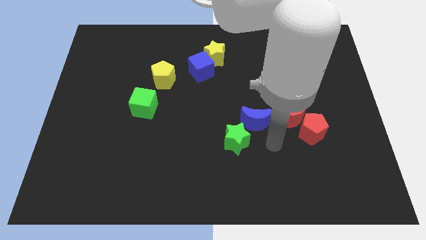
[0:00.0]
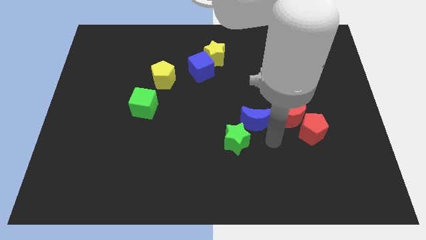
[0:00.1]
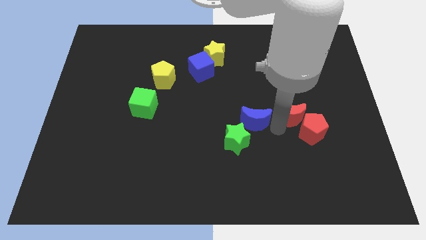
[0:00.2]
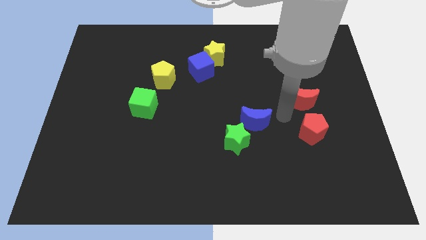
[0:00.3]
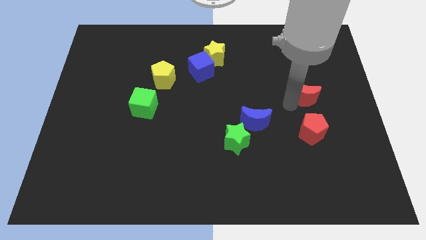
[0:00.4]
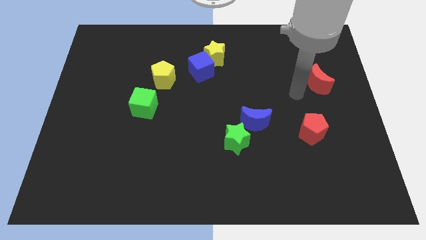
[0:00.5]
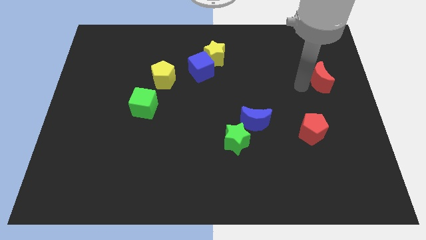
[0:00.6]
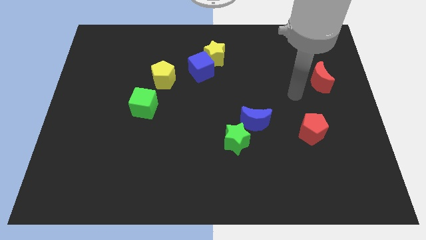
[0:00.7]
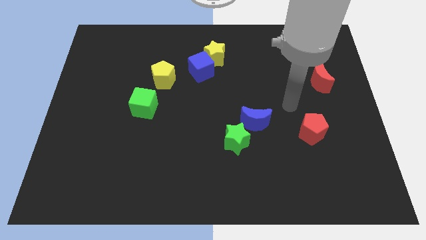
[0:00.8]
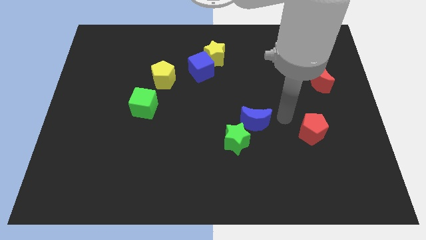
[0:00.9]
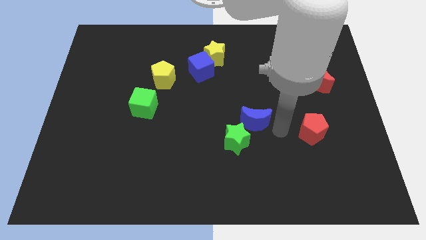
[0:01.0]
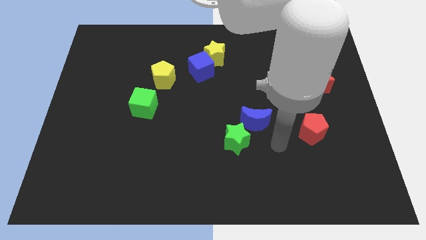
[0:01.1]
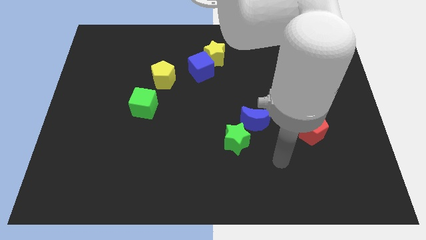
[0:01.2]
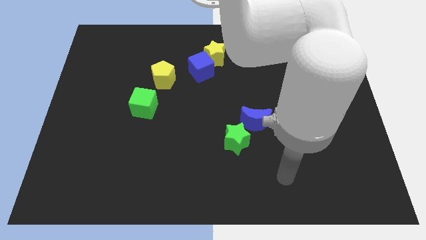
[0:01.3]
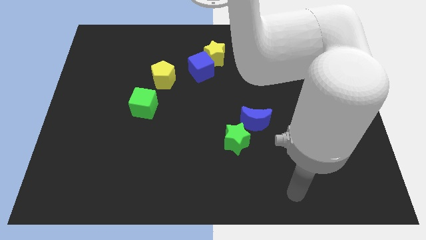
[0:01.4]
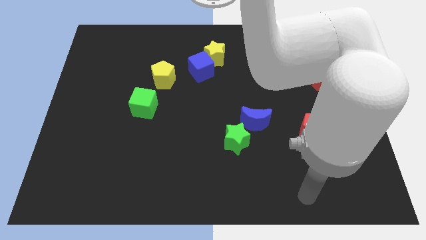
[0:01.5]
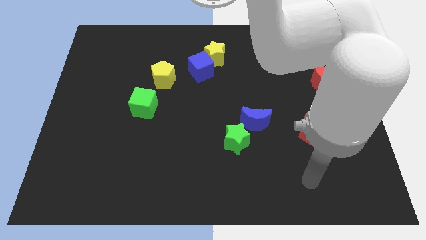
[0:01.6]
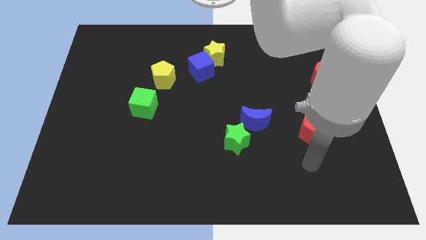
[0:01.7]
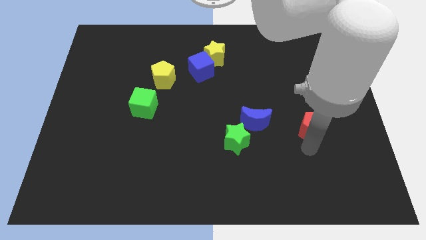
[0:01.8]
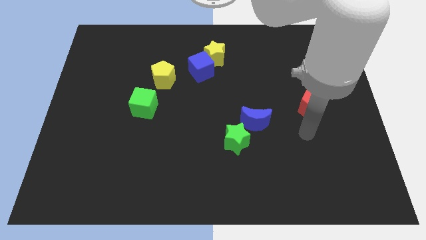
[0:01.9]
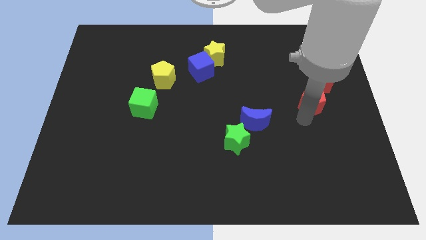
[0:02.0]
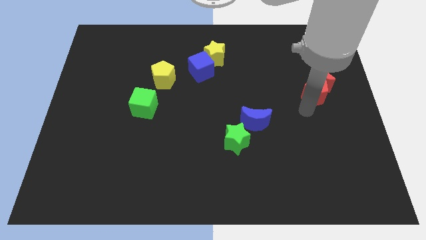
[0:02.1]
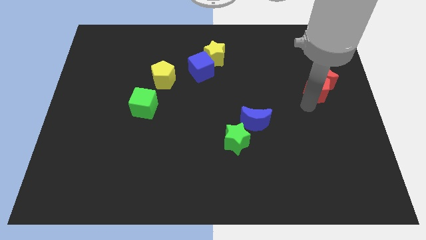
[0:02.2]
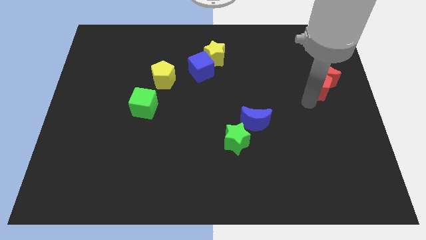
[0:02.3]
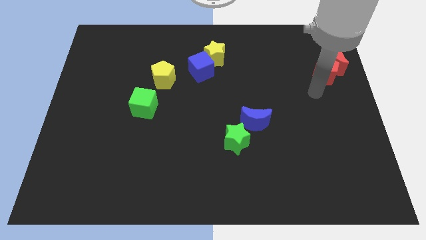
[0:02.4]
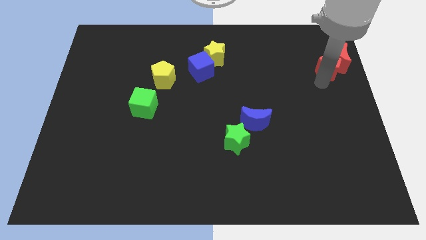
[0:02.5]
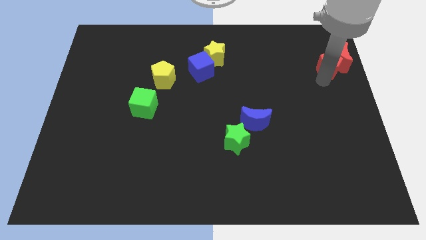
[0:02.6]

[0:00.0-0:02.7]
move the red blocks top right of the board

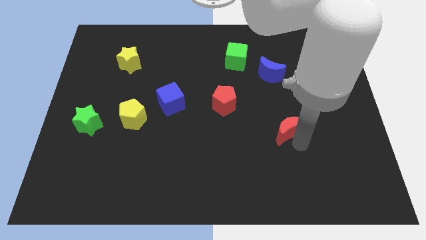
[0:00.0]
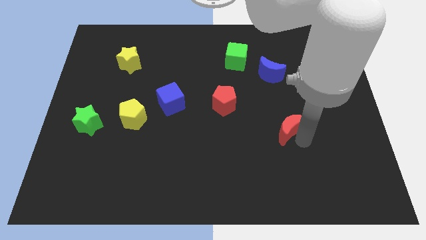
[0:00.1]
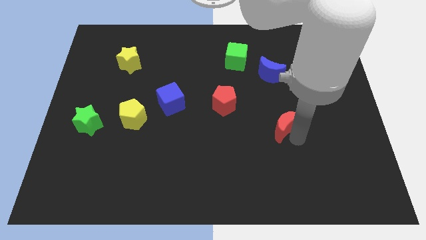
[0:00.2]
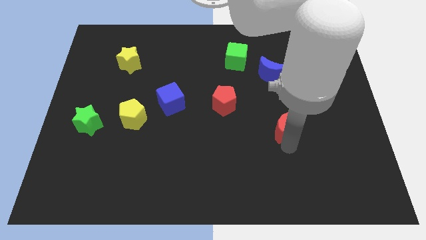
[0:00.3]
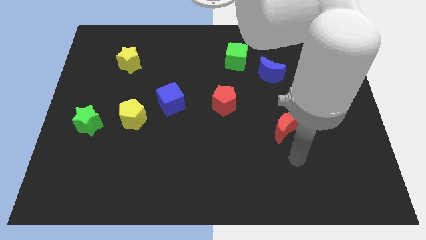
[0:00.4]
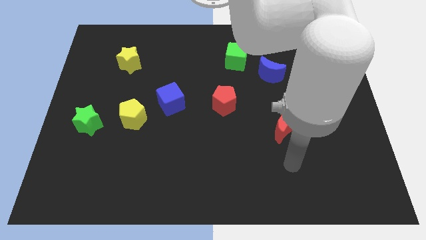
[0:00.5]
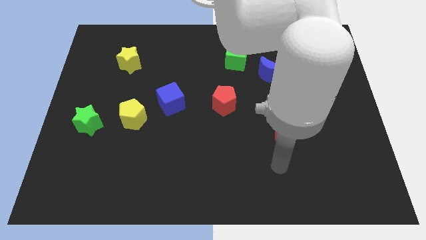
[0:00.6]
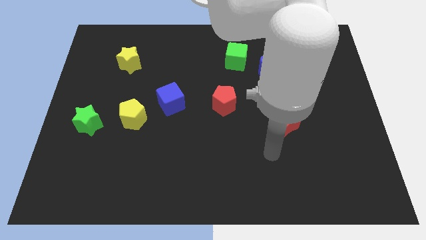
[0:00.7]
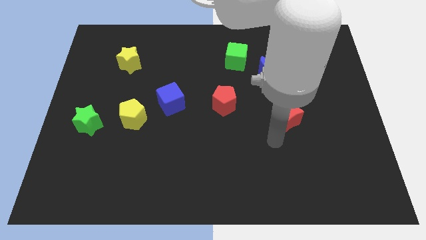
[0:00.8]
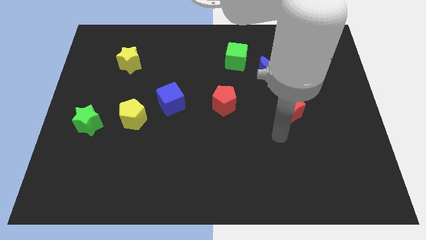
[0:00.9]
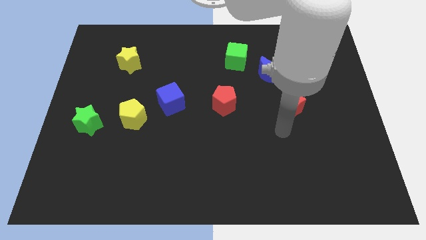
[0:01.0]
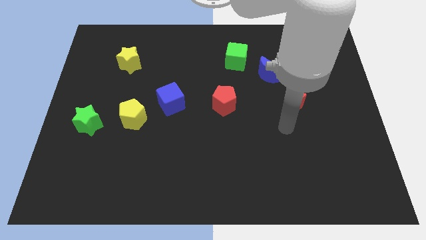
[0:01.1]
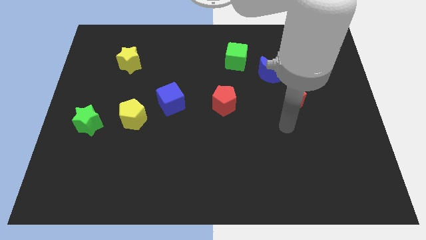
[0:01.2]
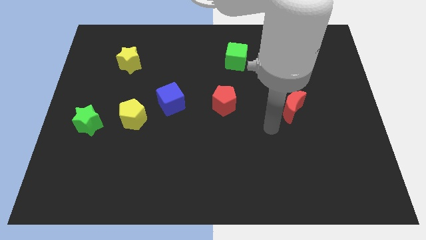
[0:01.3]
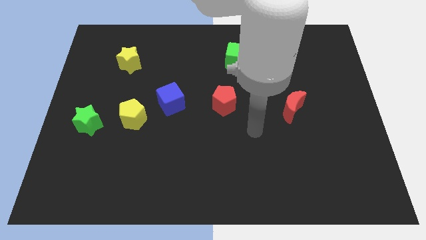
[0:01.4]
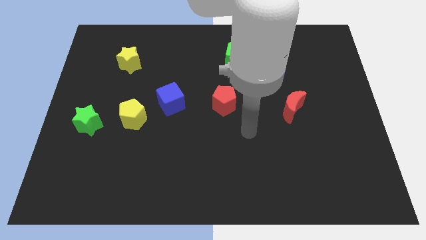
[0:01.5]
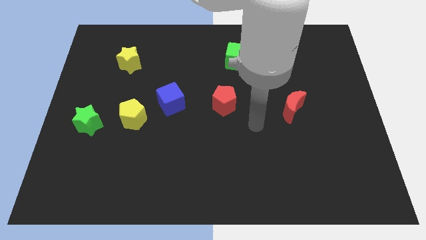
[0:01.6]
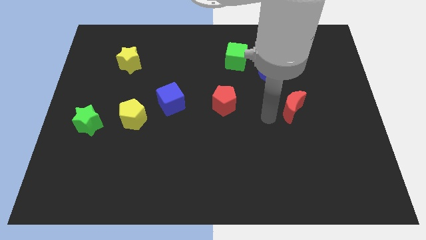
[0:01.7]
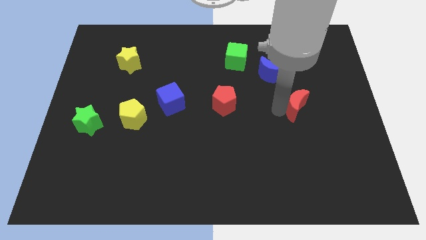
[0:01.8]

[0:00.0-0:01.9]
move the red moon to right side of the board

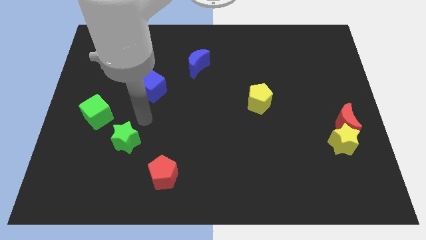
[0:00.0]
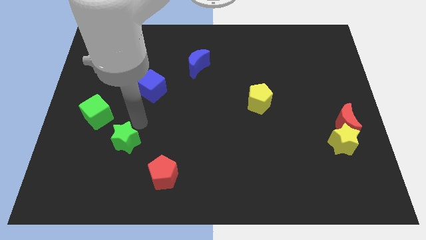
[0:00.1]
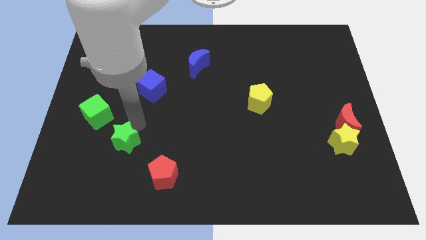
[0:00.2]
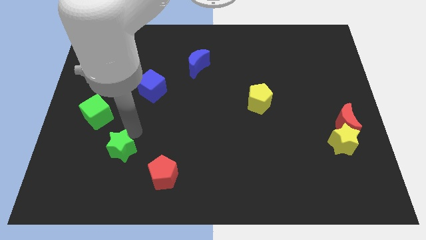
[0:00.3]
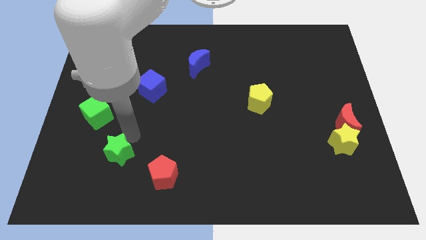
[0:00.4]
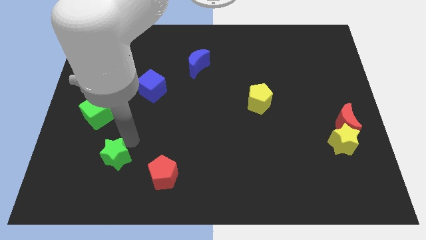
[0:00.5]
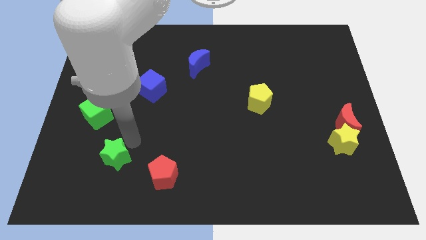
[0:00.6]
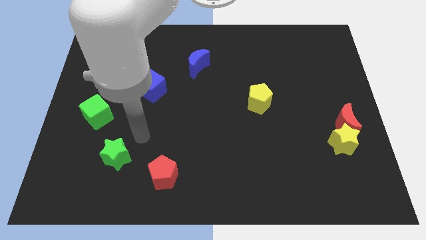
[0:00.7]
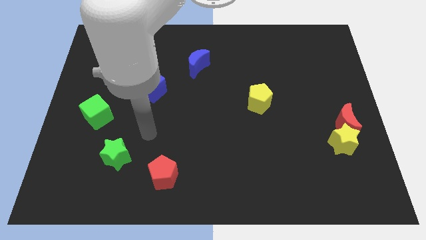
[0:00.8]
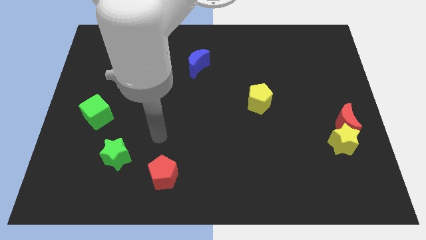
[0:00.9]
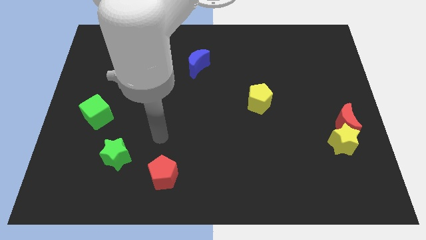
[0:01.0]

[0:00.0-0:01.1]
slightly push the green star to the bottom of the board

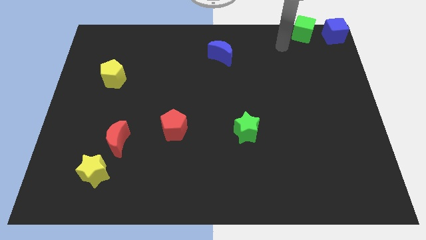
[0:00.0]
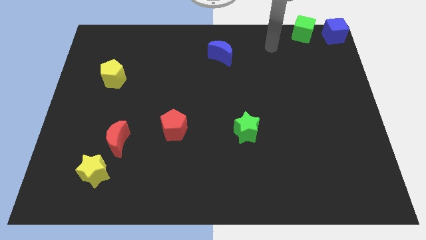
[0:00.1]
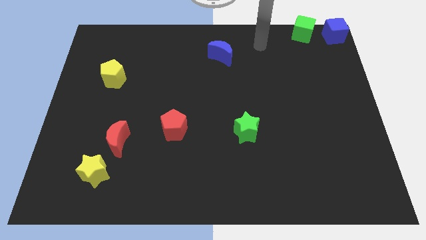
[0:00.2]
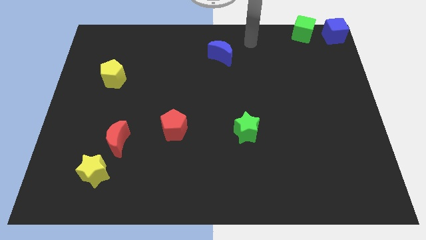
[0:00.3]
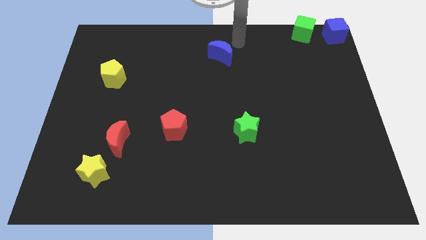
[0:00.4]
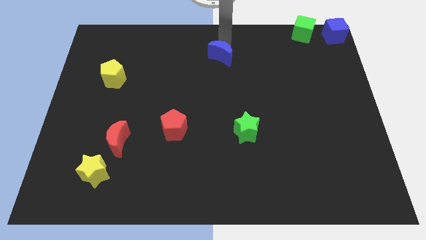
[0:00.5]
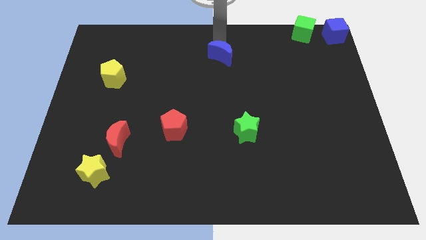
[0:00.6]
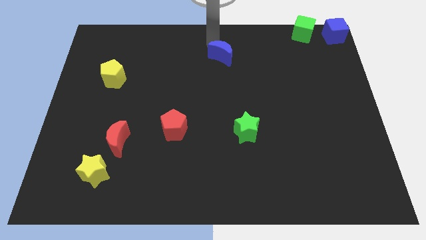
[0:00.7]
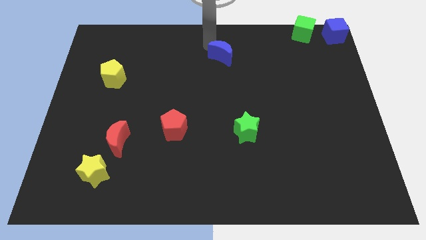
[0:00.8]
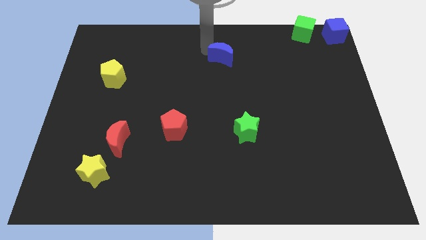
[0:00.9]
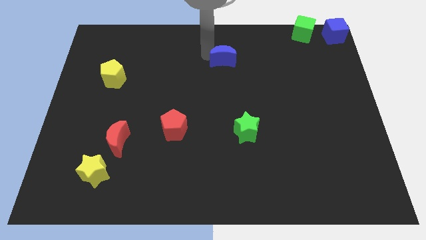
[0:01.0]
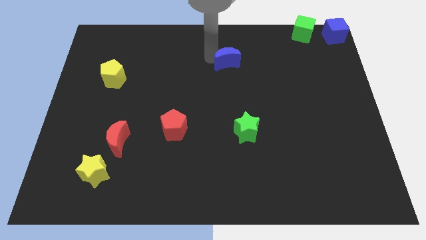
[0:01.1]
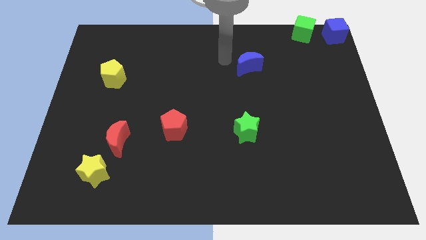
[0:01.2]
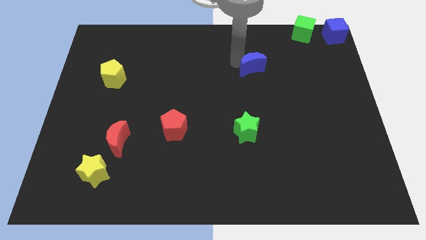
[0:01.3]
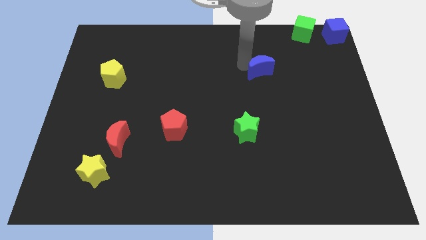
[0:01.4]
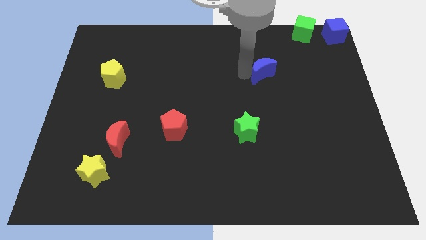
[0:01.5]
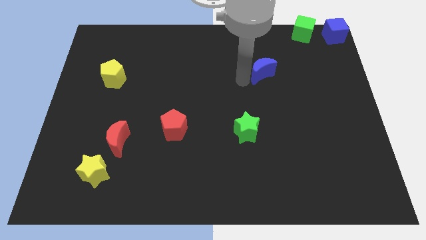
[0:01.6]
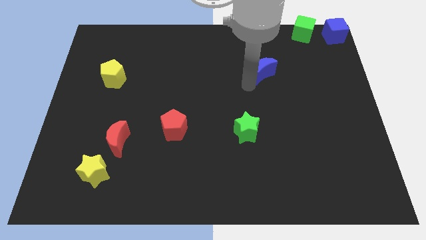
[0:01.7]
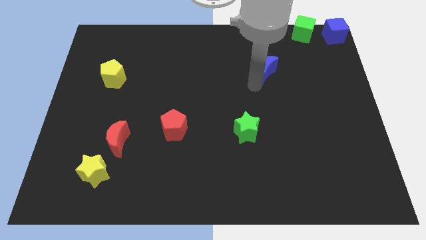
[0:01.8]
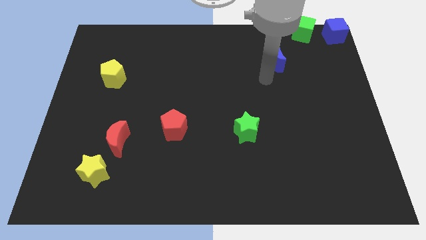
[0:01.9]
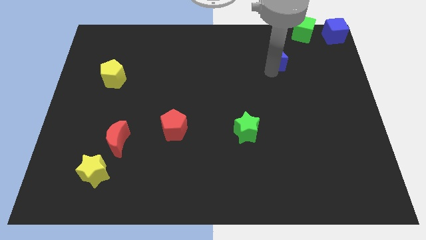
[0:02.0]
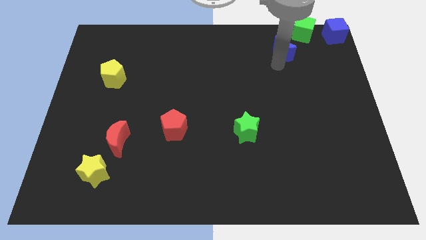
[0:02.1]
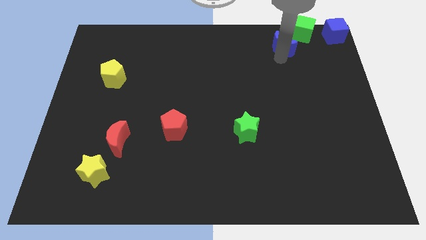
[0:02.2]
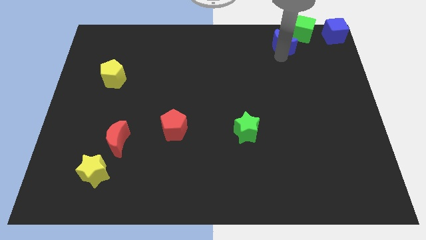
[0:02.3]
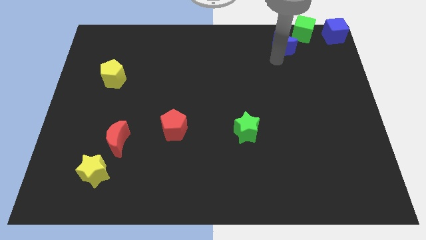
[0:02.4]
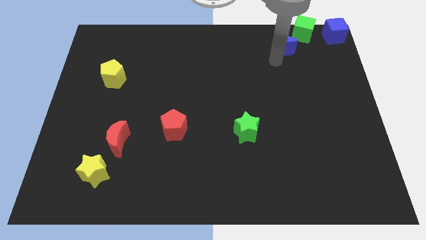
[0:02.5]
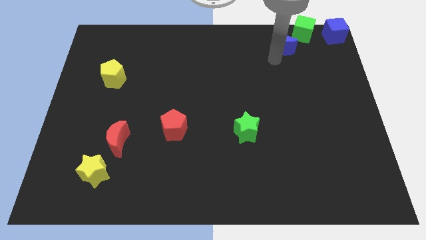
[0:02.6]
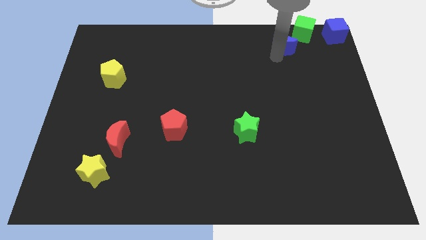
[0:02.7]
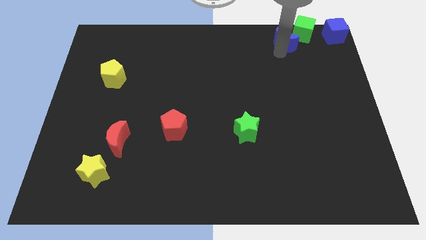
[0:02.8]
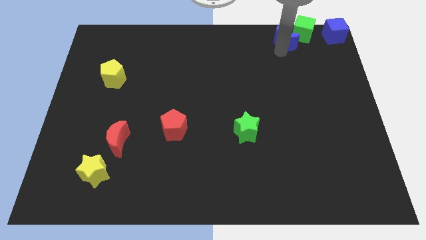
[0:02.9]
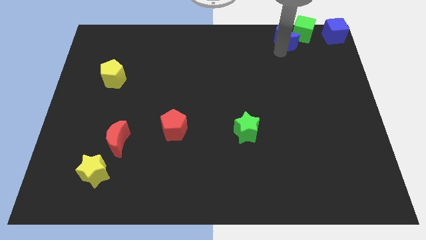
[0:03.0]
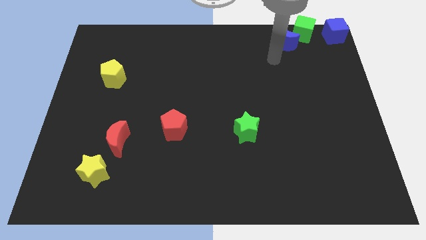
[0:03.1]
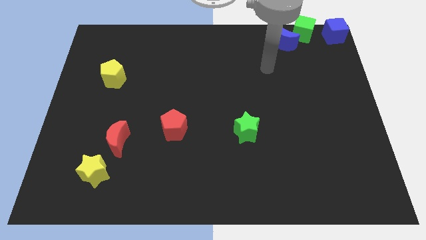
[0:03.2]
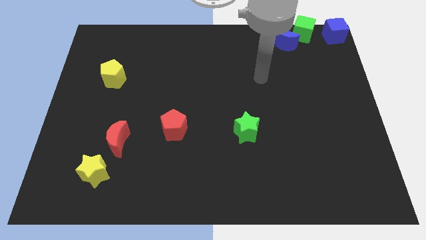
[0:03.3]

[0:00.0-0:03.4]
push the blue moon diagonally bottom left to the green cube
